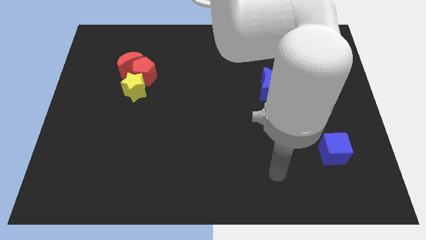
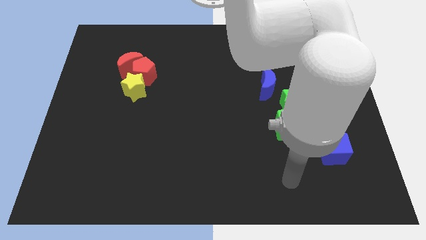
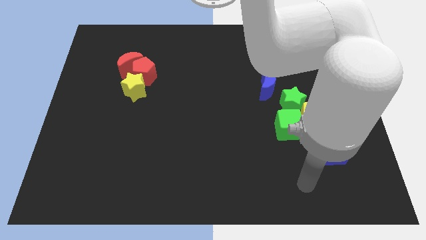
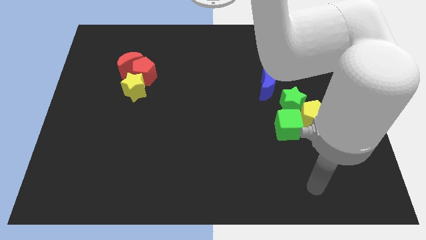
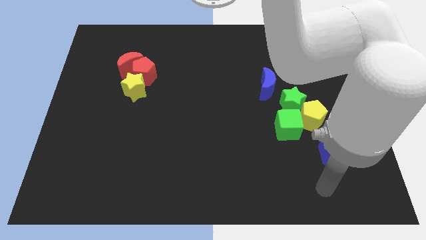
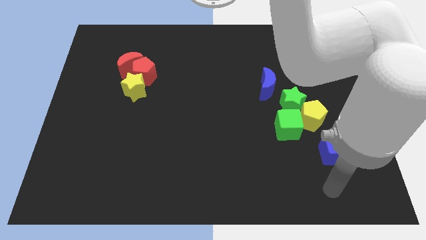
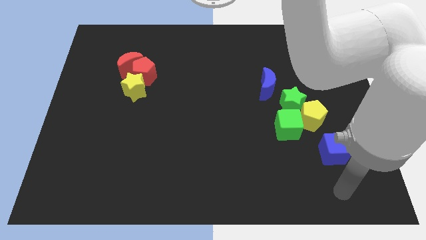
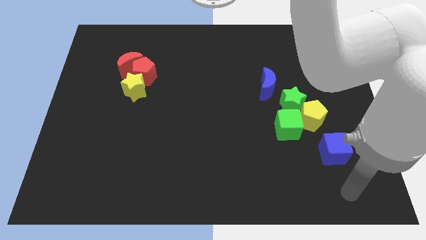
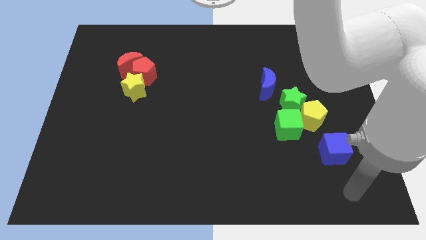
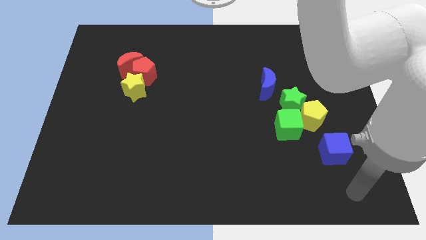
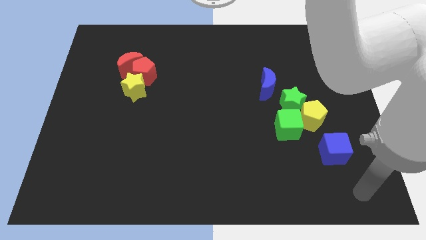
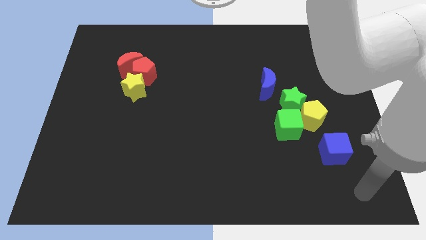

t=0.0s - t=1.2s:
place your arm below the blue cube

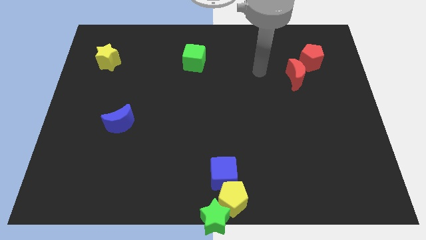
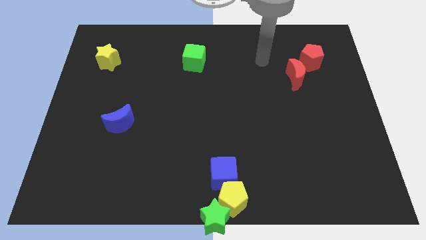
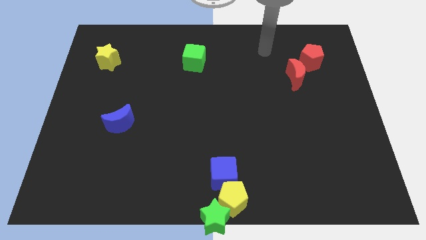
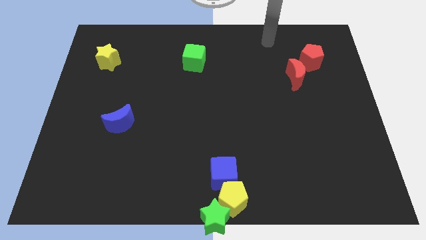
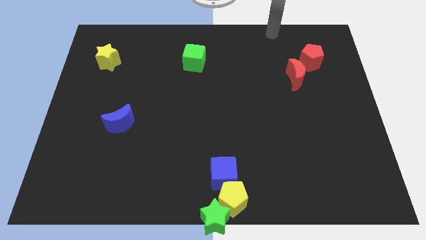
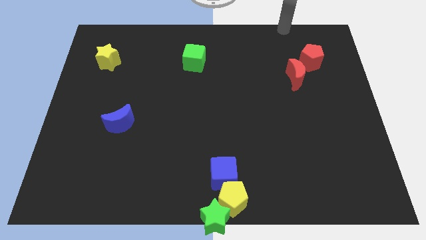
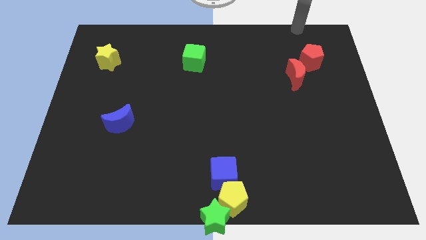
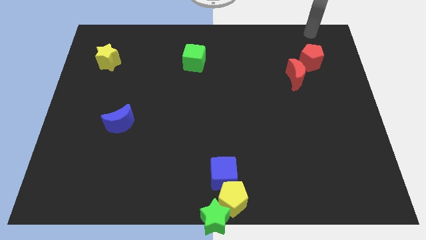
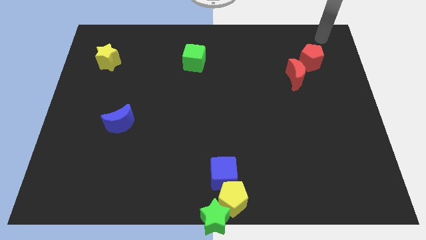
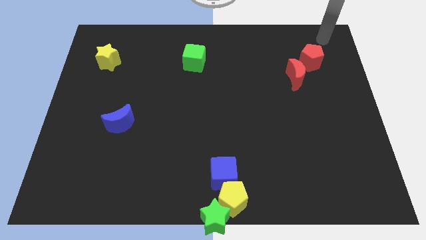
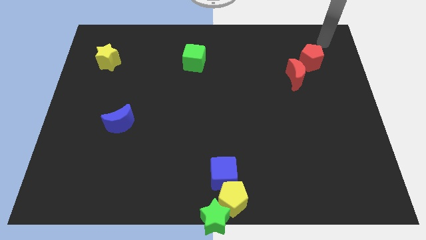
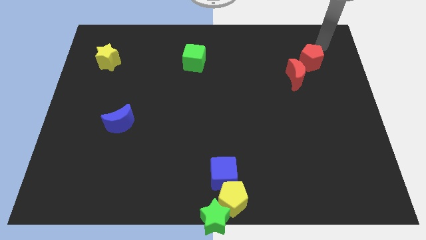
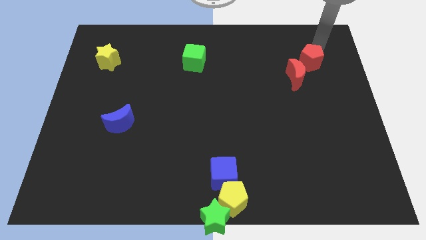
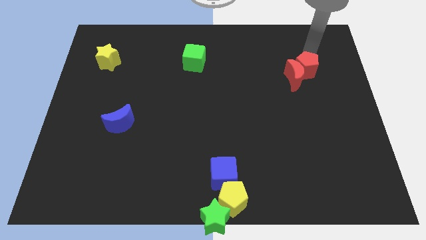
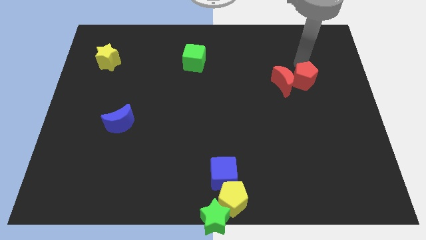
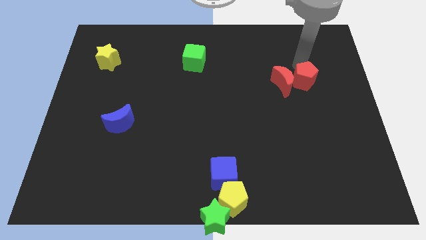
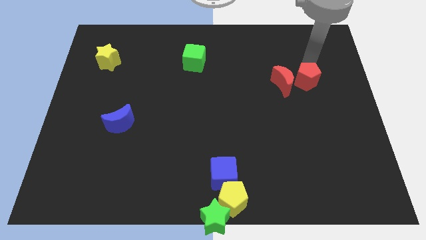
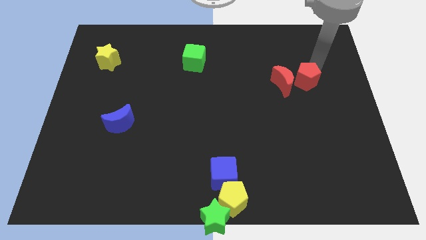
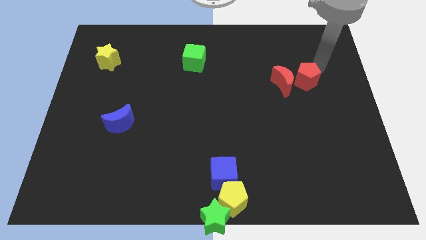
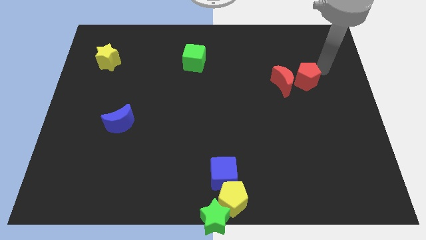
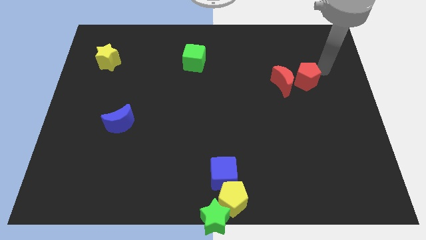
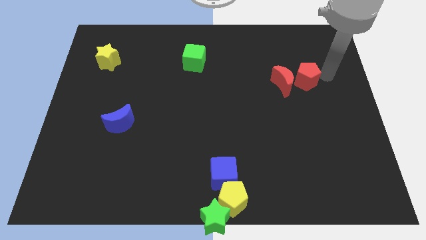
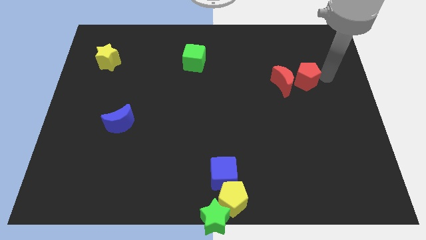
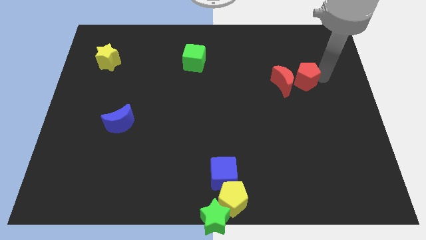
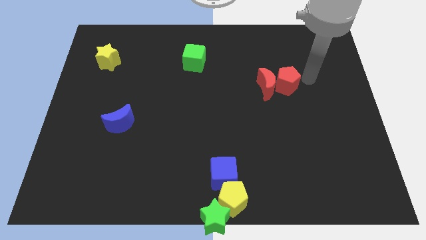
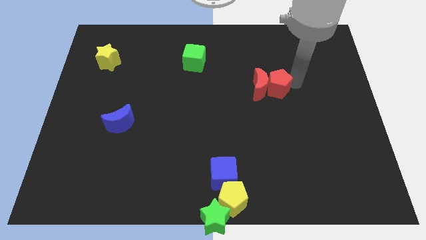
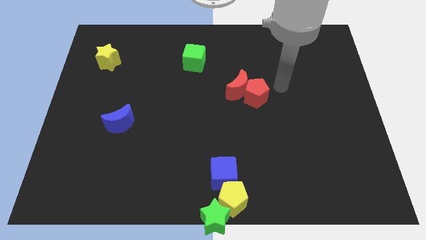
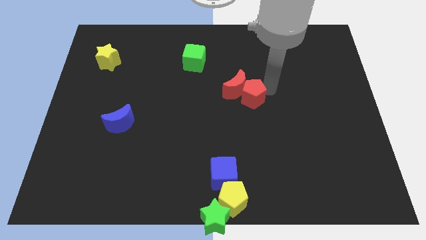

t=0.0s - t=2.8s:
push the red blocks diagonally to the bottom

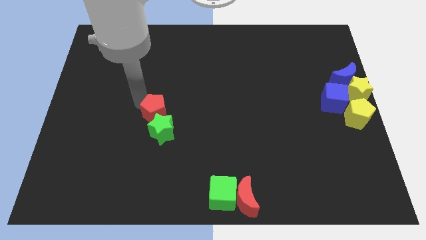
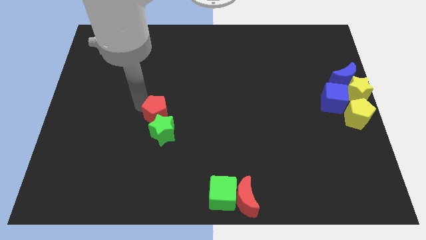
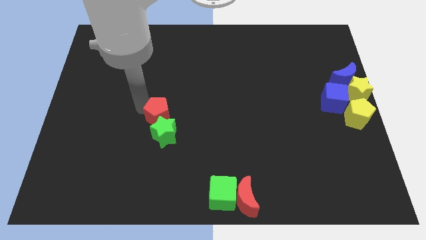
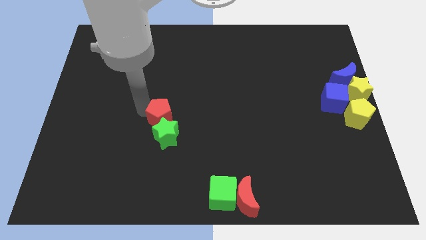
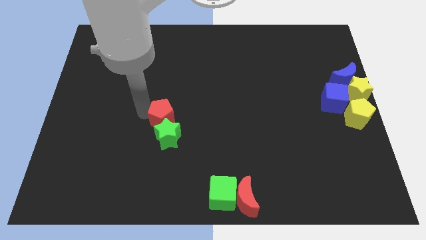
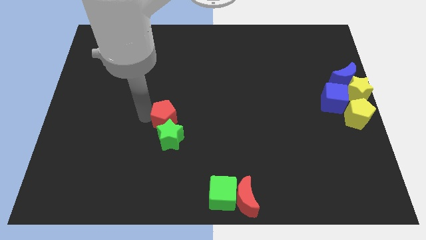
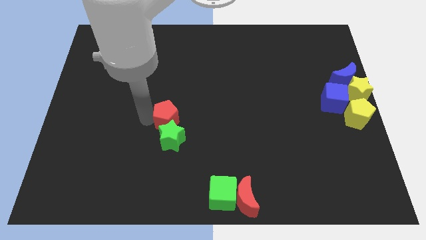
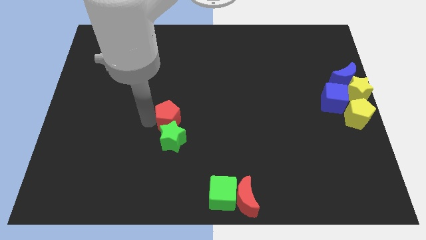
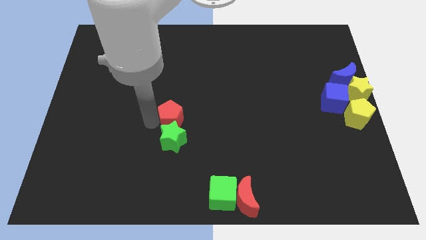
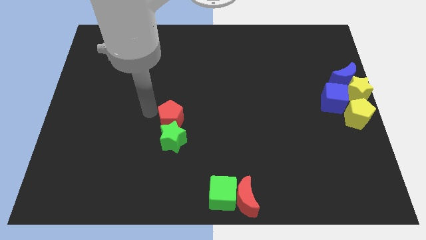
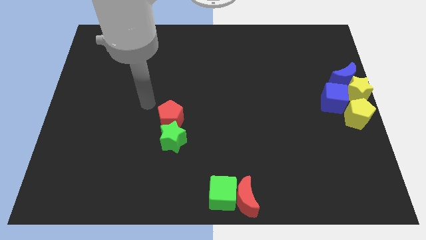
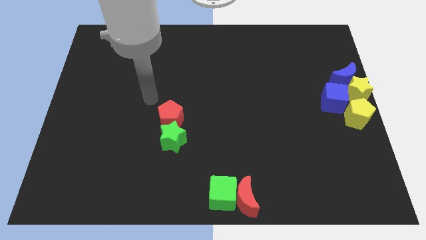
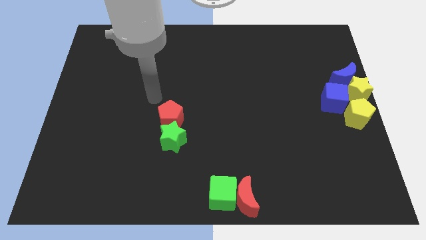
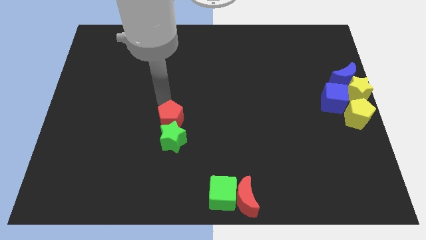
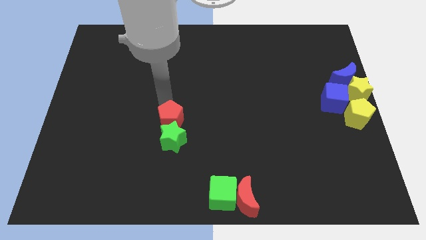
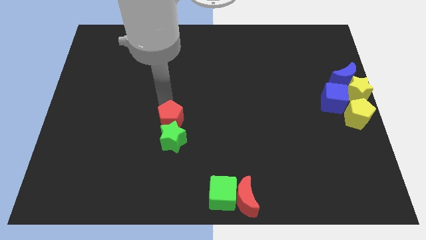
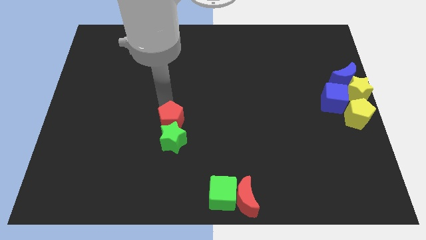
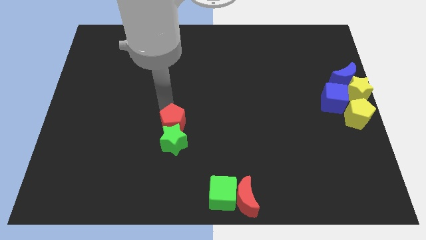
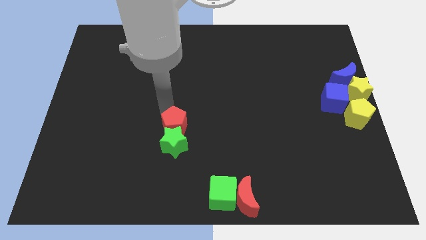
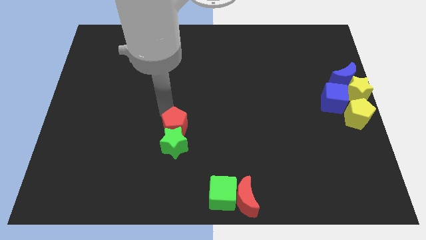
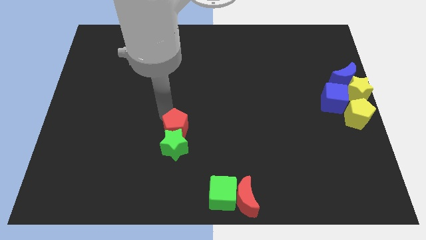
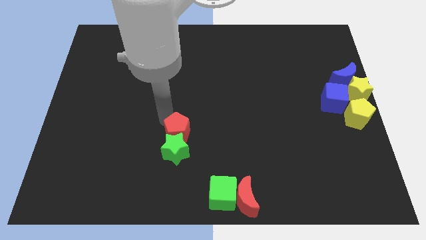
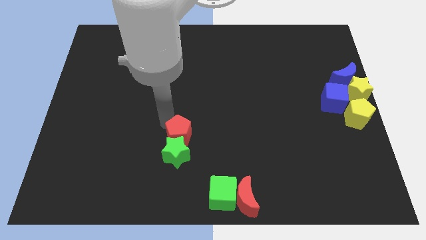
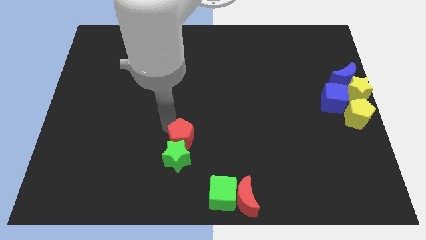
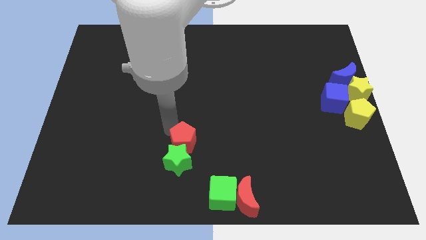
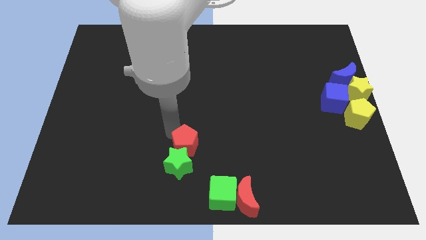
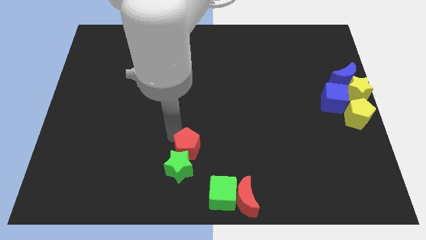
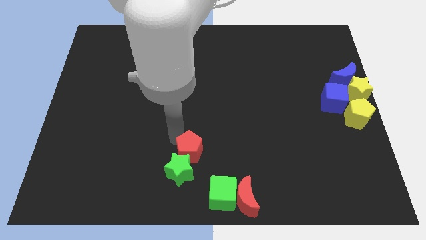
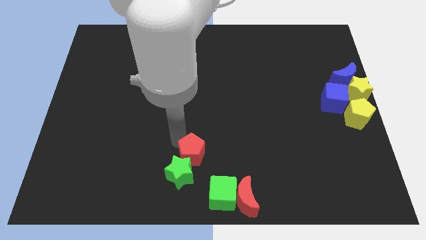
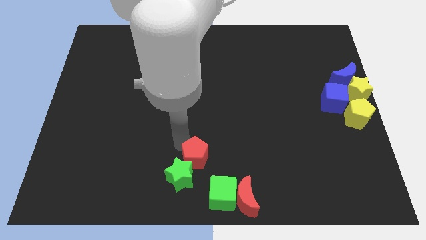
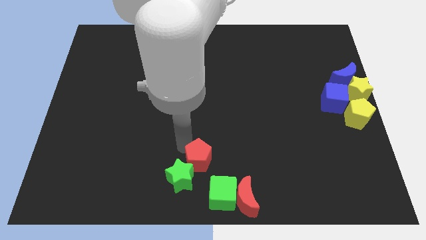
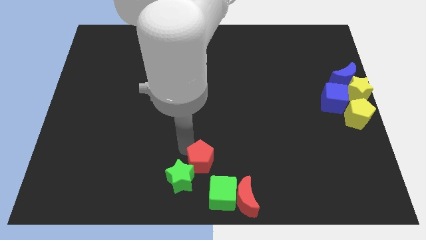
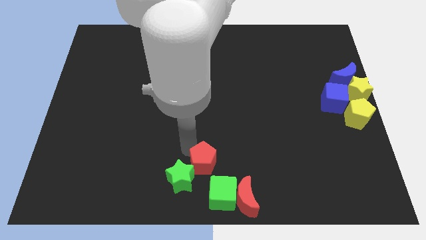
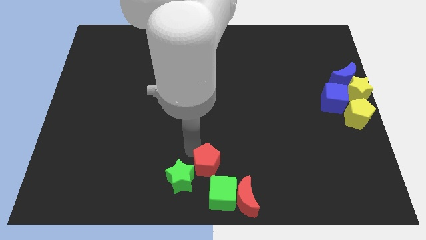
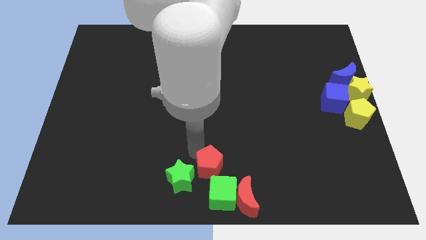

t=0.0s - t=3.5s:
move the green star with the help of red pentagon to the bottom center

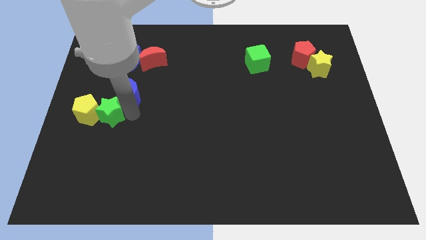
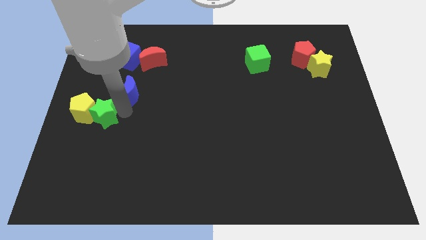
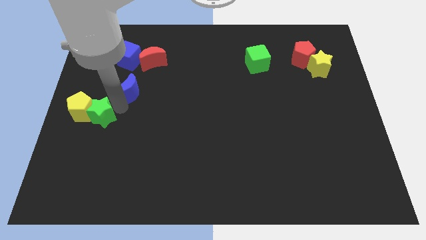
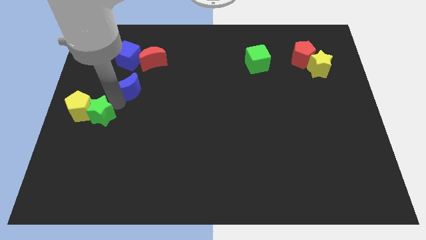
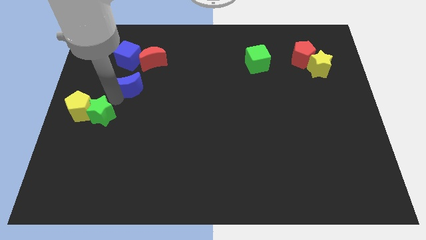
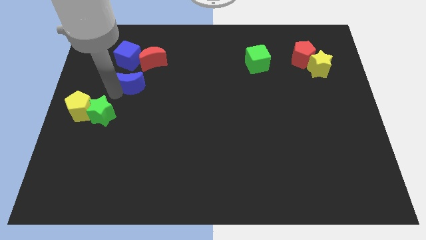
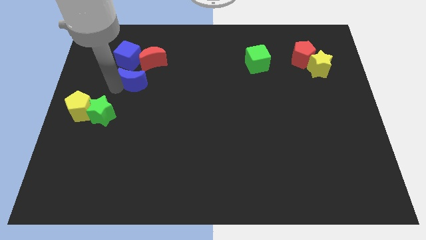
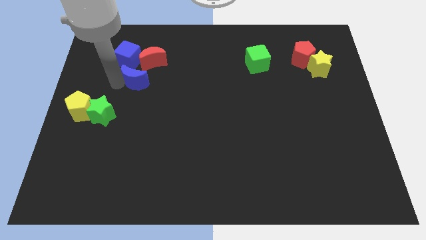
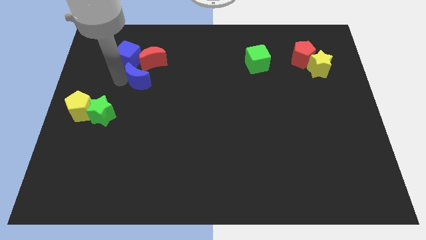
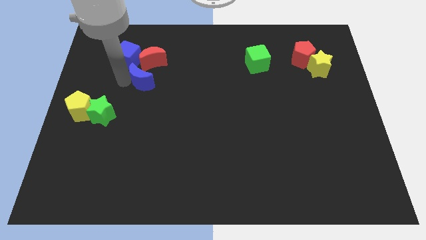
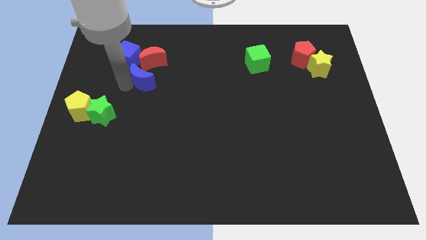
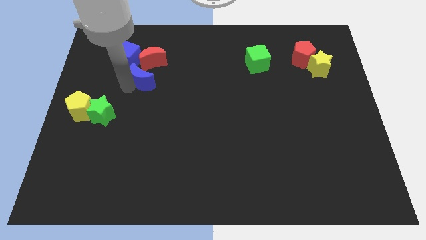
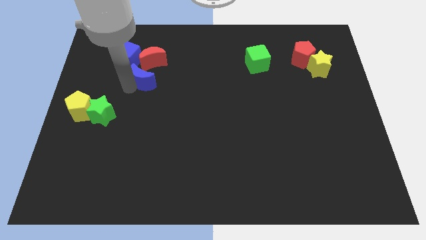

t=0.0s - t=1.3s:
separate blue crescent from the green star

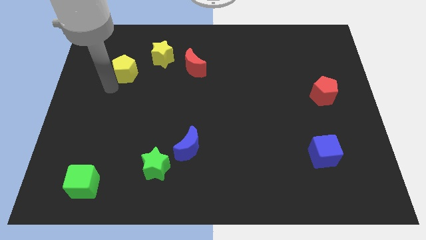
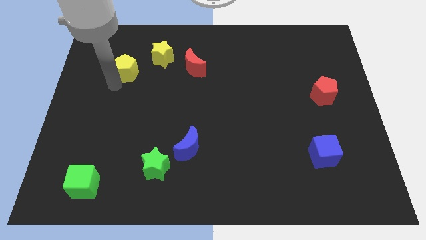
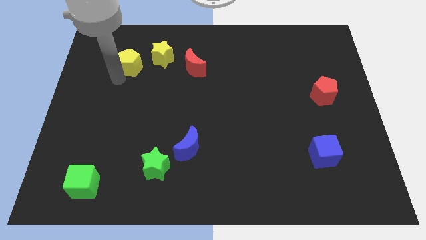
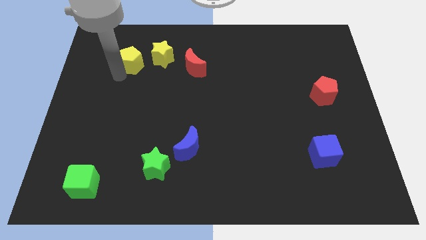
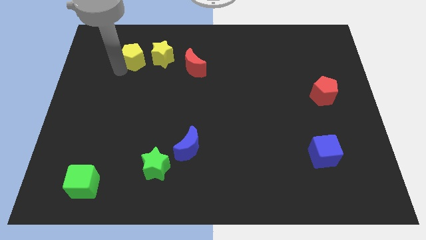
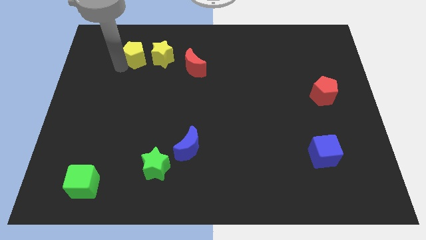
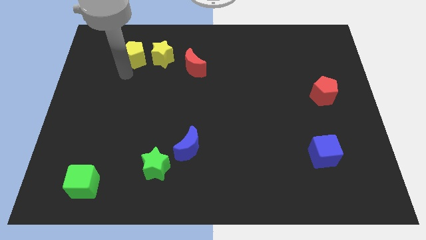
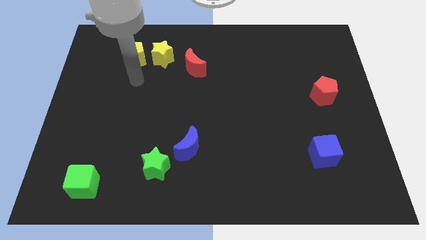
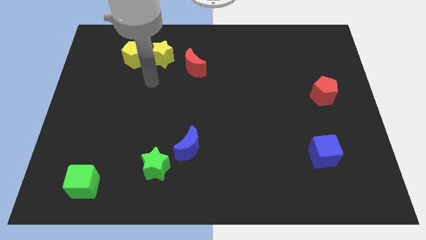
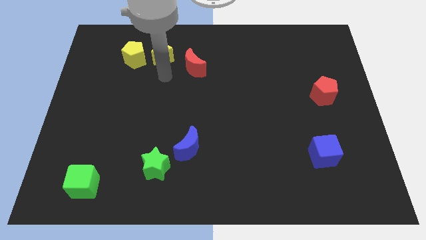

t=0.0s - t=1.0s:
move the yellow pentagon to the left of the yellow star
